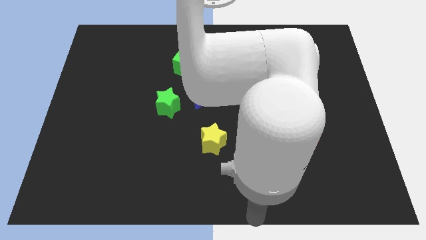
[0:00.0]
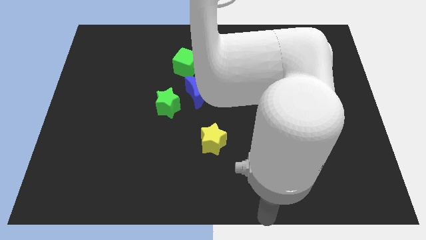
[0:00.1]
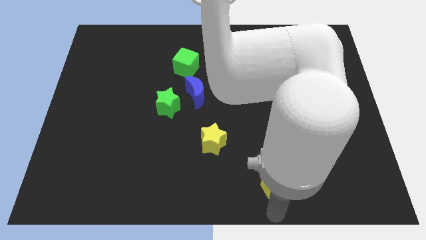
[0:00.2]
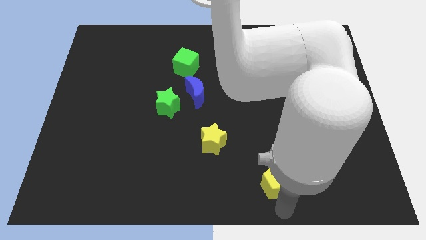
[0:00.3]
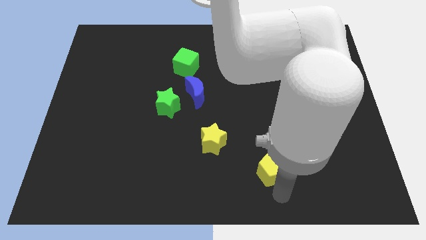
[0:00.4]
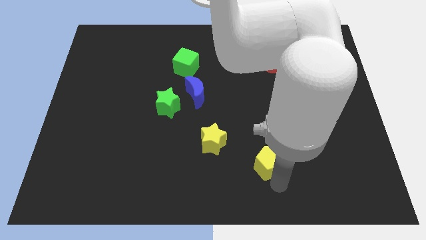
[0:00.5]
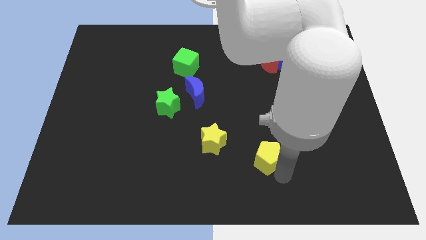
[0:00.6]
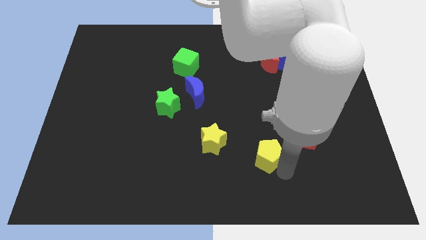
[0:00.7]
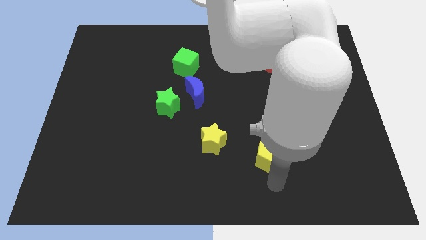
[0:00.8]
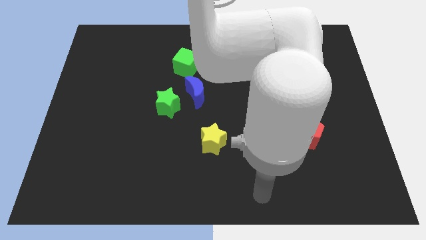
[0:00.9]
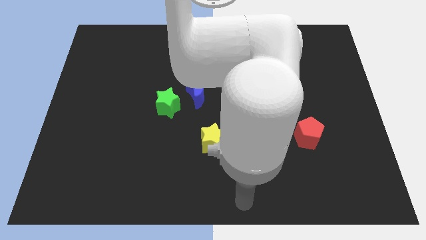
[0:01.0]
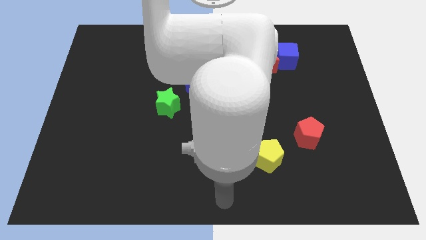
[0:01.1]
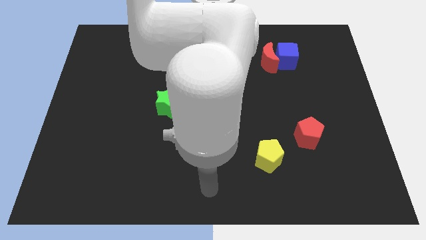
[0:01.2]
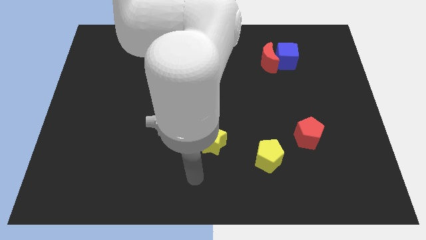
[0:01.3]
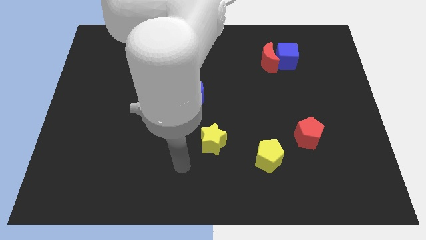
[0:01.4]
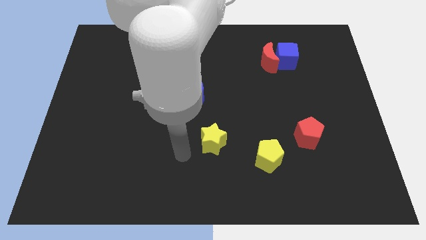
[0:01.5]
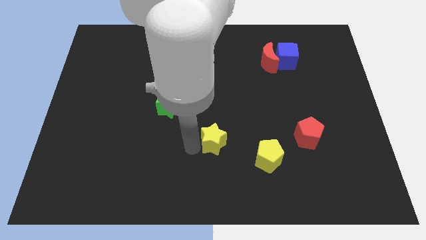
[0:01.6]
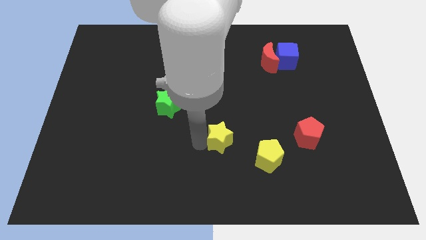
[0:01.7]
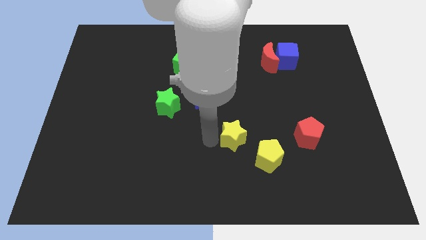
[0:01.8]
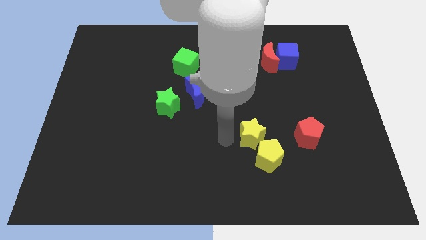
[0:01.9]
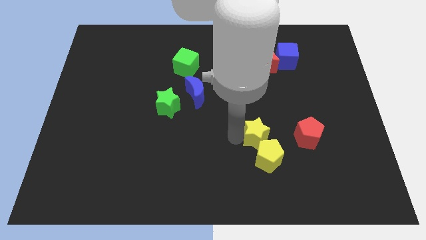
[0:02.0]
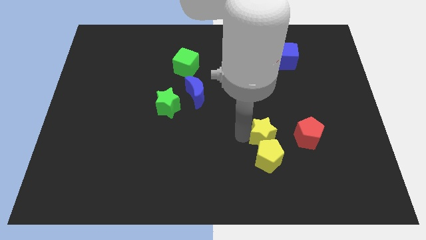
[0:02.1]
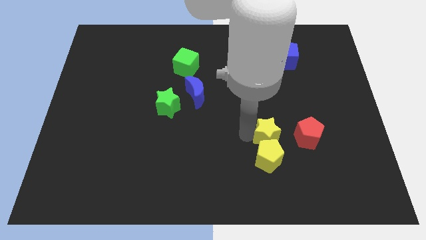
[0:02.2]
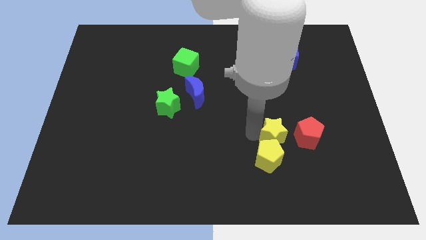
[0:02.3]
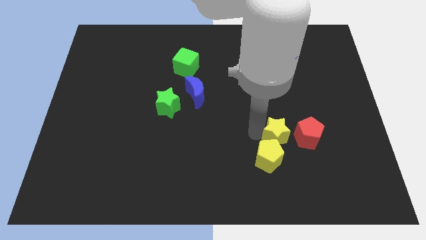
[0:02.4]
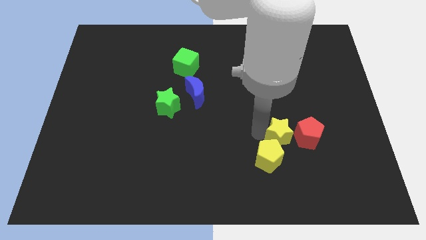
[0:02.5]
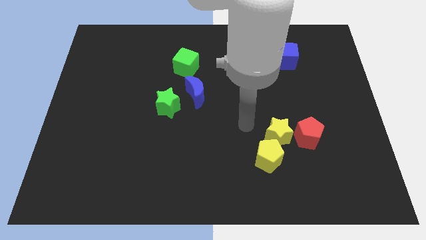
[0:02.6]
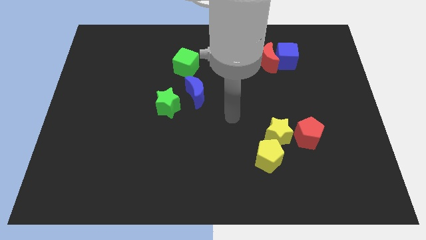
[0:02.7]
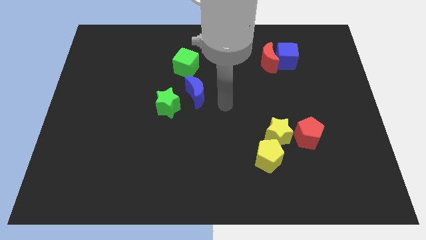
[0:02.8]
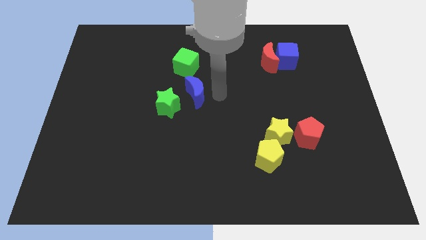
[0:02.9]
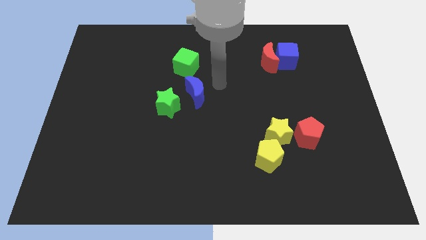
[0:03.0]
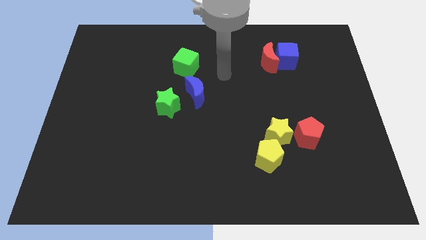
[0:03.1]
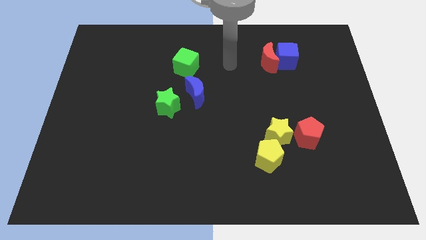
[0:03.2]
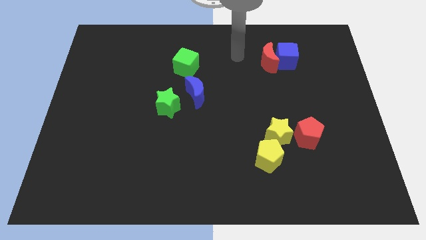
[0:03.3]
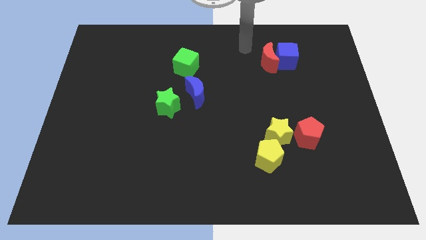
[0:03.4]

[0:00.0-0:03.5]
move the yellow star to the left of the red pentagon

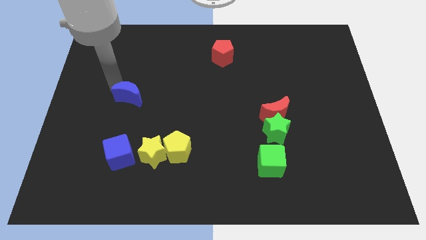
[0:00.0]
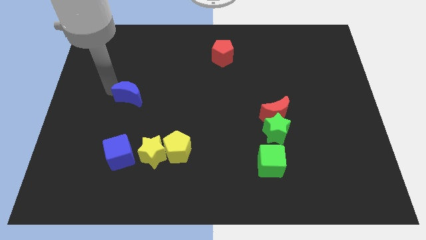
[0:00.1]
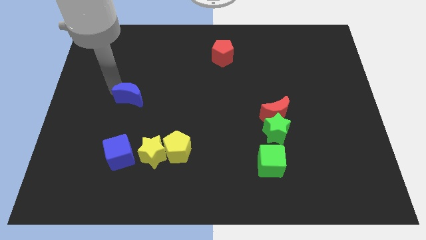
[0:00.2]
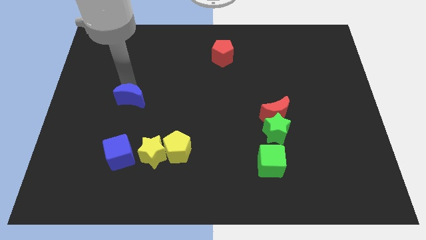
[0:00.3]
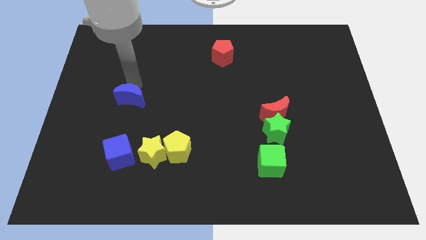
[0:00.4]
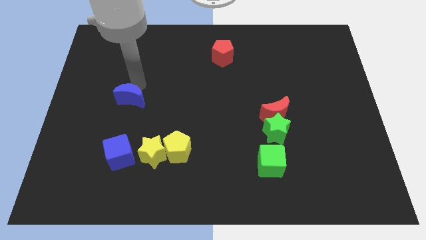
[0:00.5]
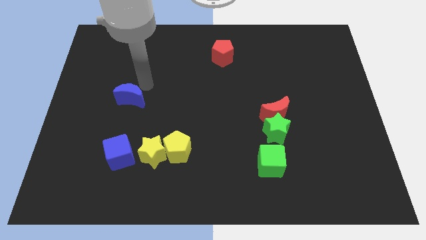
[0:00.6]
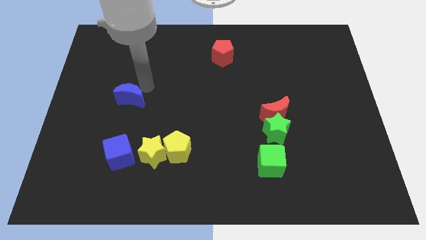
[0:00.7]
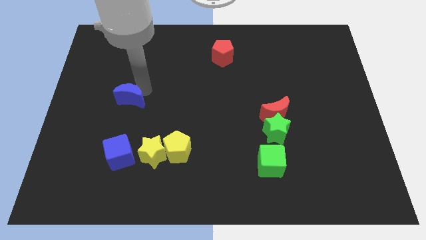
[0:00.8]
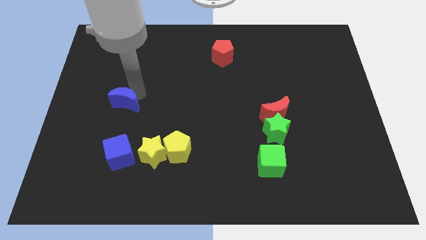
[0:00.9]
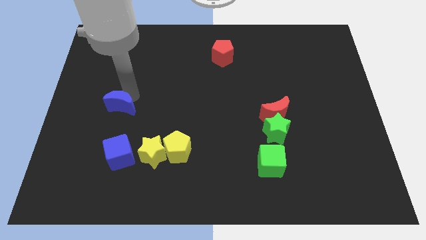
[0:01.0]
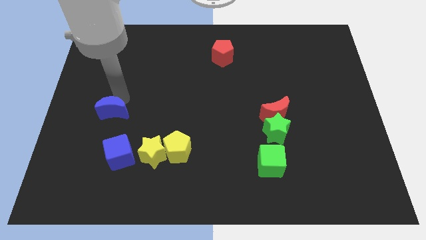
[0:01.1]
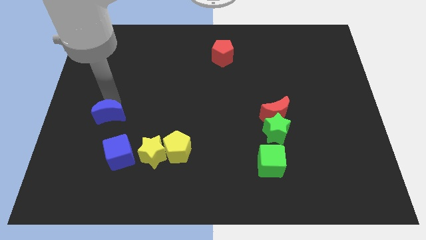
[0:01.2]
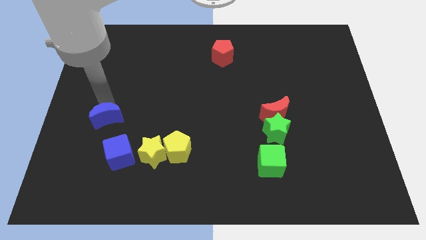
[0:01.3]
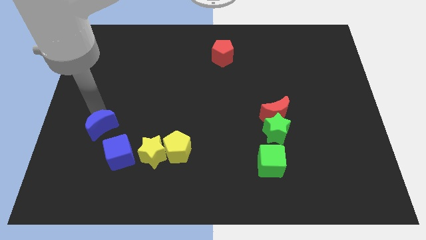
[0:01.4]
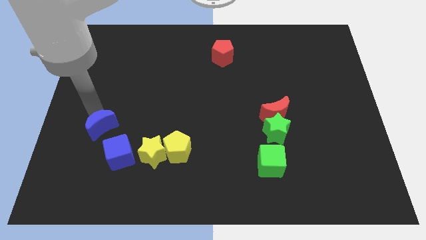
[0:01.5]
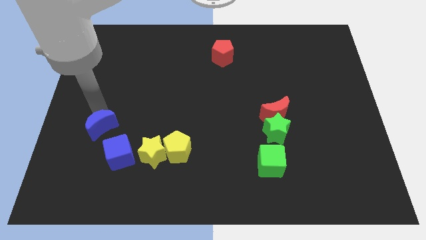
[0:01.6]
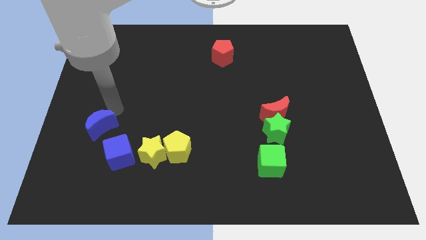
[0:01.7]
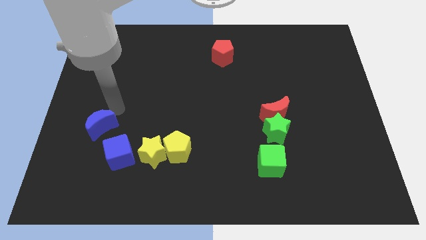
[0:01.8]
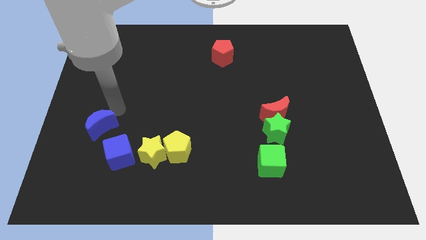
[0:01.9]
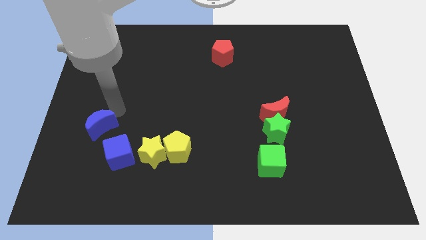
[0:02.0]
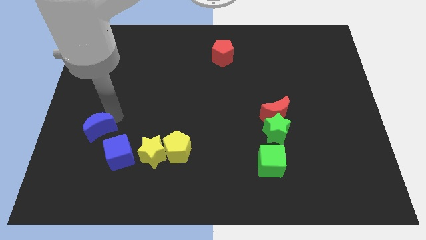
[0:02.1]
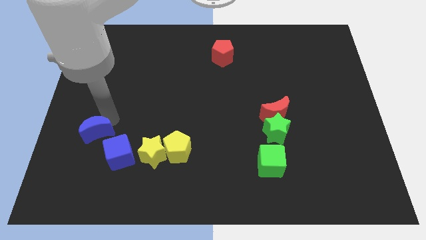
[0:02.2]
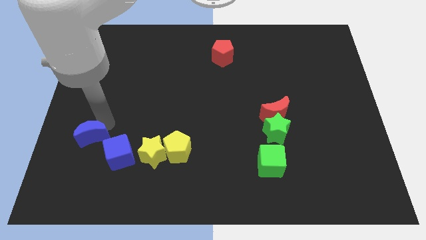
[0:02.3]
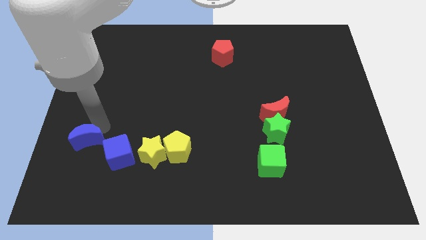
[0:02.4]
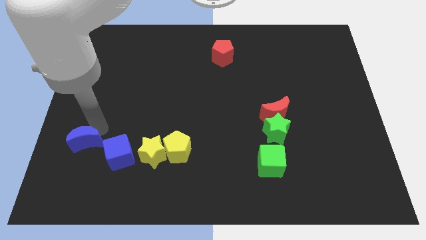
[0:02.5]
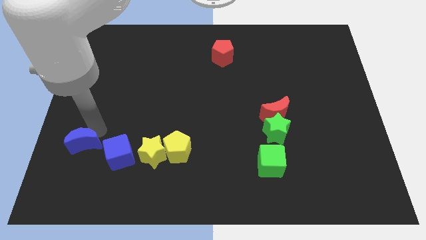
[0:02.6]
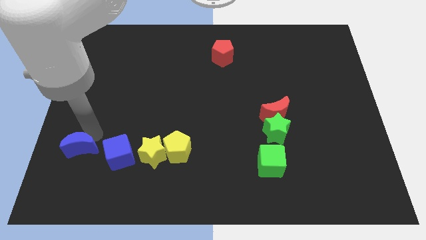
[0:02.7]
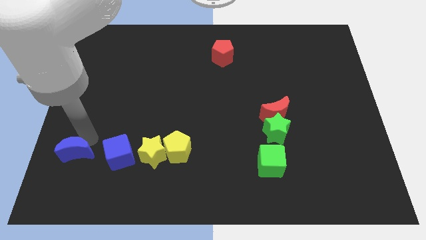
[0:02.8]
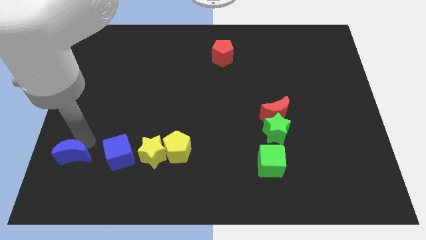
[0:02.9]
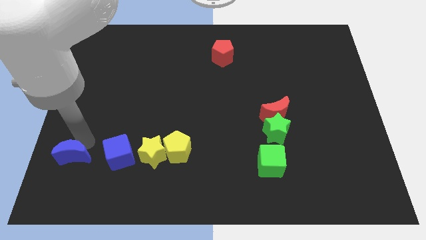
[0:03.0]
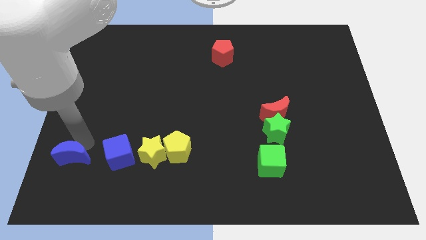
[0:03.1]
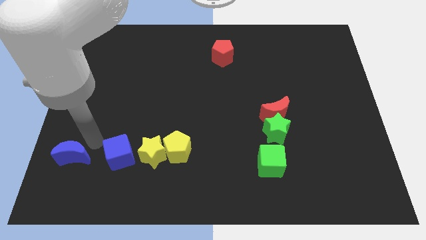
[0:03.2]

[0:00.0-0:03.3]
move the blue moon to the left of the blue cube

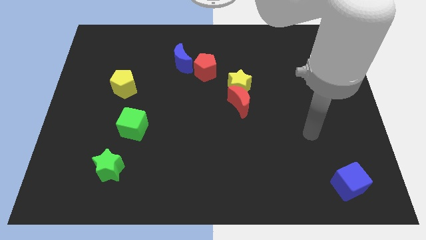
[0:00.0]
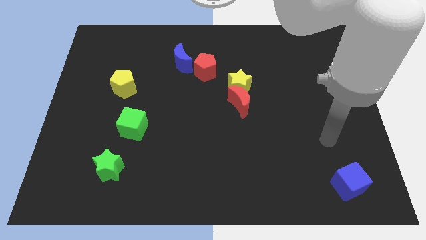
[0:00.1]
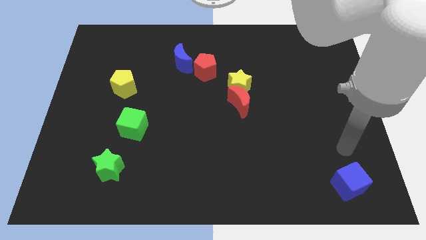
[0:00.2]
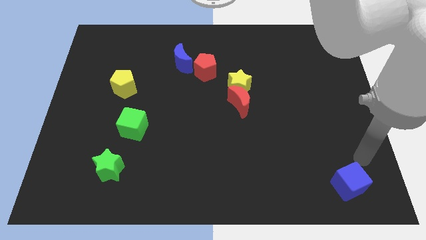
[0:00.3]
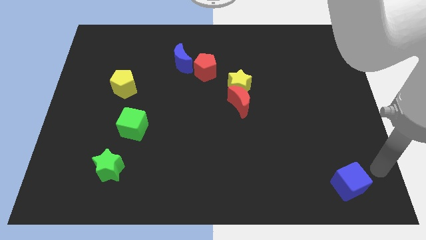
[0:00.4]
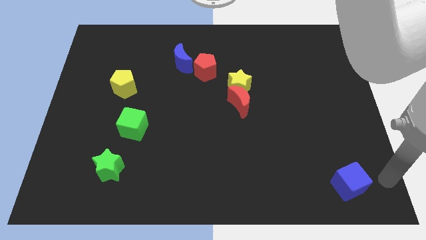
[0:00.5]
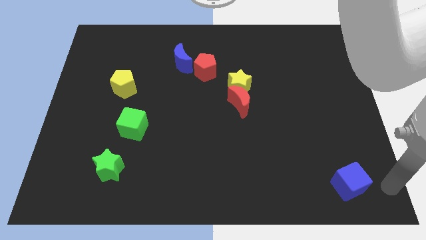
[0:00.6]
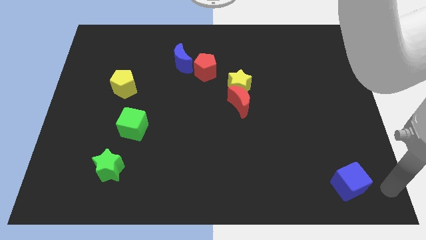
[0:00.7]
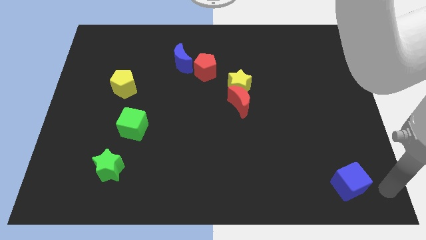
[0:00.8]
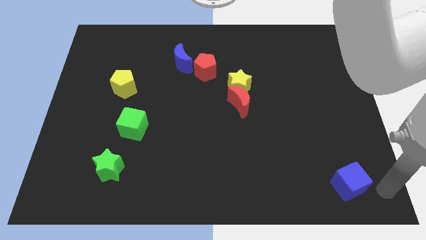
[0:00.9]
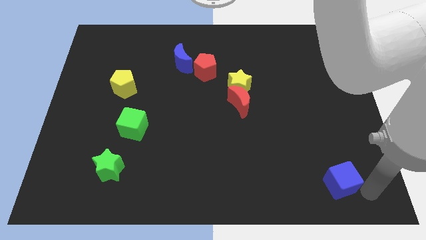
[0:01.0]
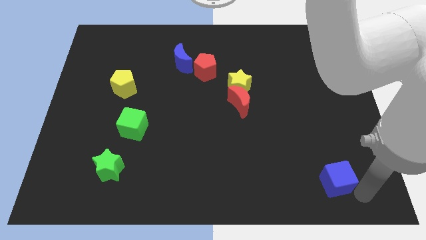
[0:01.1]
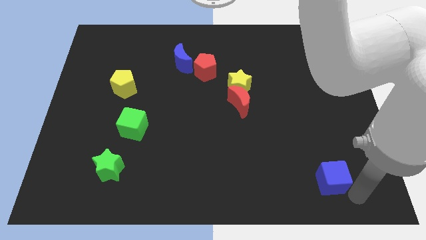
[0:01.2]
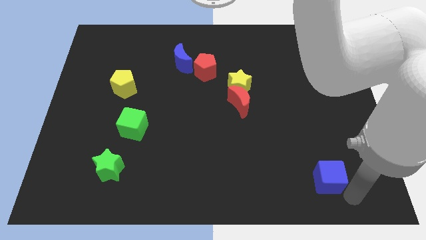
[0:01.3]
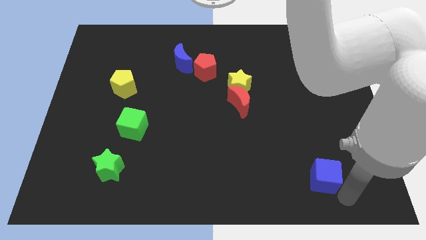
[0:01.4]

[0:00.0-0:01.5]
move the blue cube slightly to the top of the board

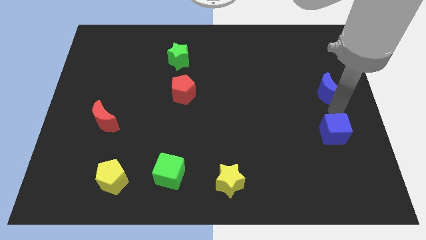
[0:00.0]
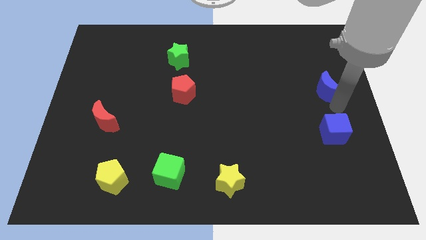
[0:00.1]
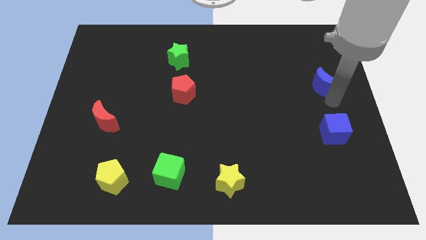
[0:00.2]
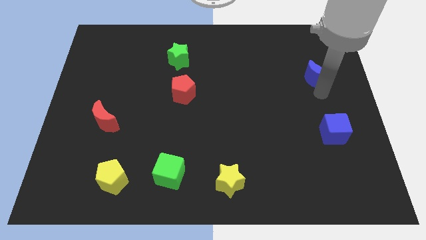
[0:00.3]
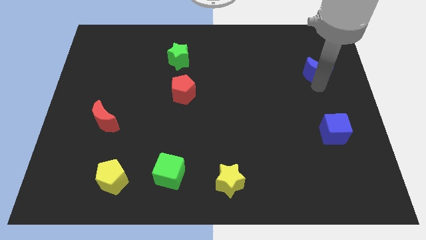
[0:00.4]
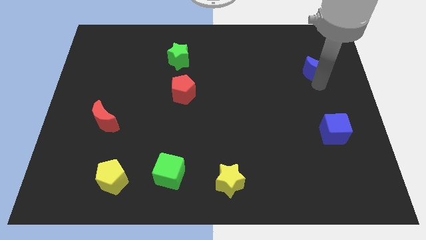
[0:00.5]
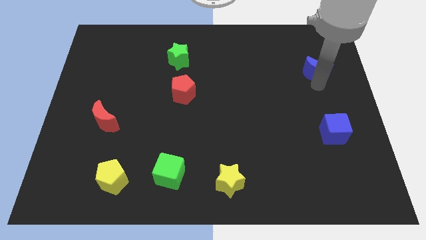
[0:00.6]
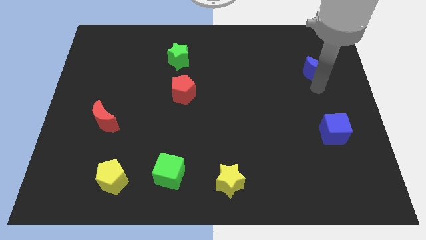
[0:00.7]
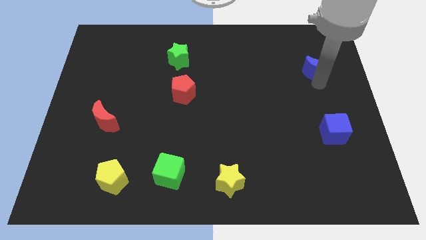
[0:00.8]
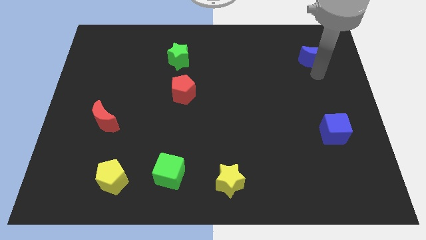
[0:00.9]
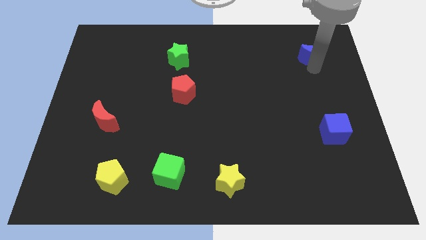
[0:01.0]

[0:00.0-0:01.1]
push blue moon towards top right
